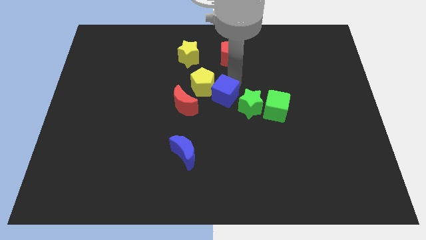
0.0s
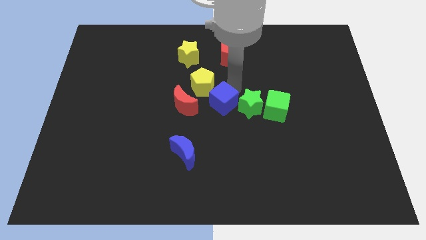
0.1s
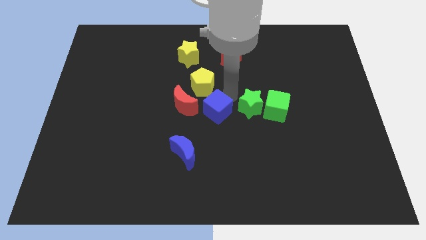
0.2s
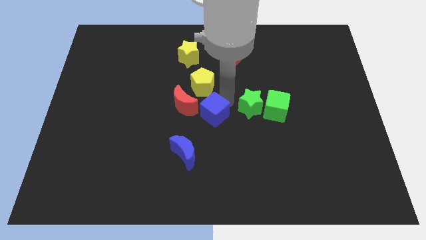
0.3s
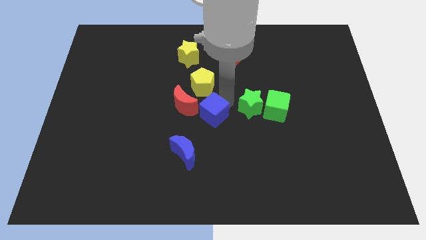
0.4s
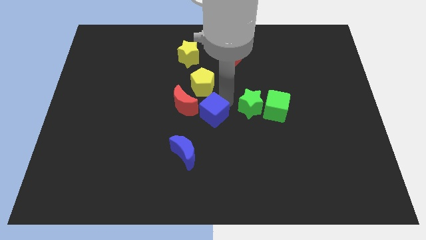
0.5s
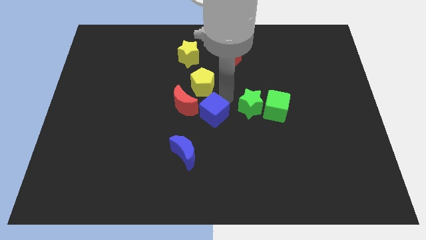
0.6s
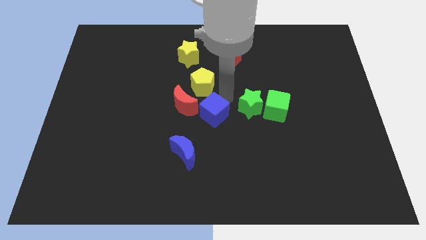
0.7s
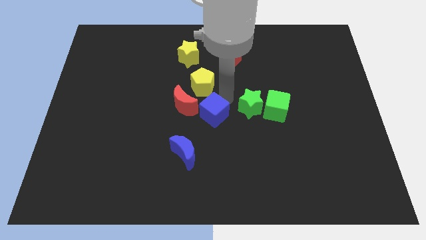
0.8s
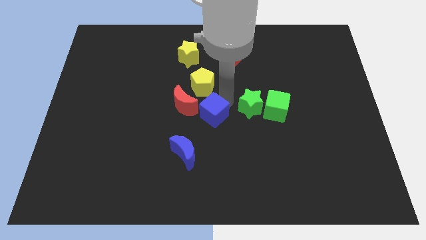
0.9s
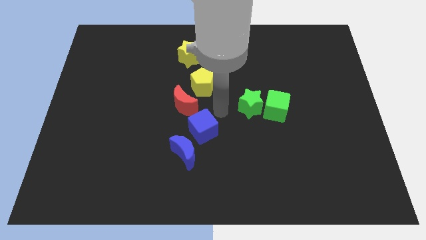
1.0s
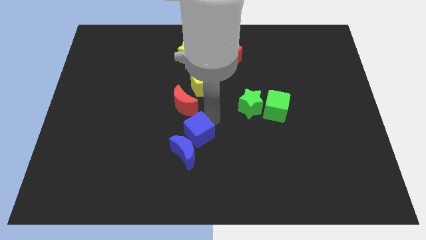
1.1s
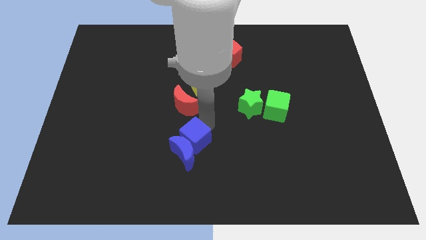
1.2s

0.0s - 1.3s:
push the blue cube towards the blue moon

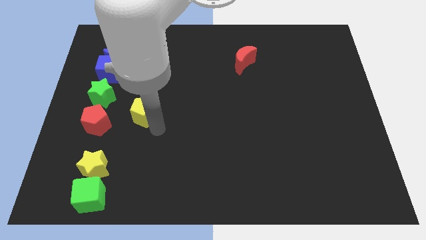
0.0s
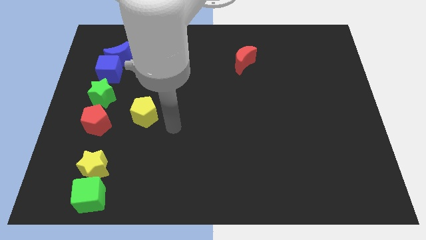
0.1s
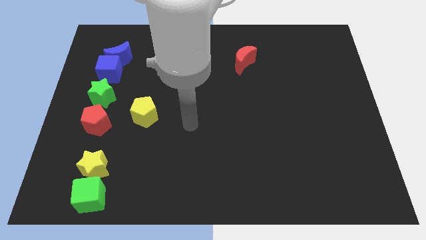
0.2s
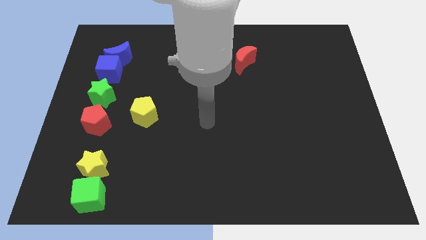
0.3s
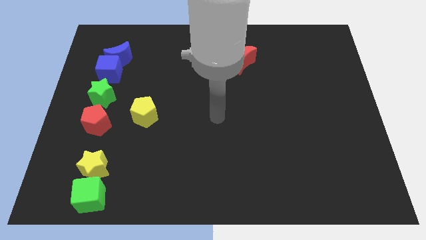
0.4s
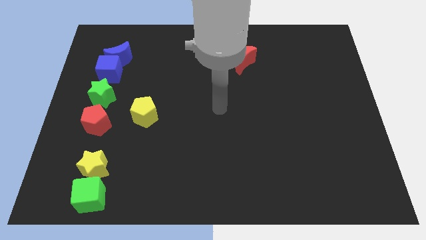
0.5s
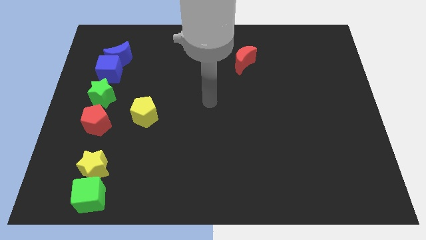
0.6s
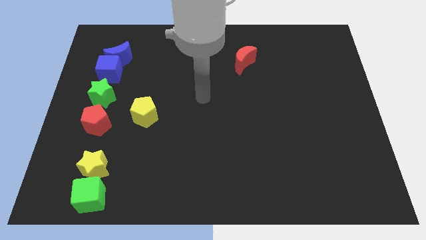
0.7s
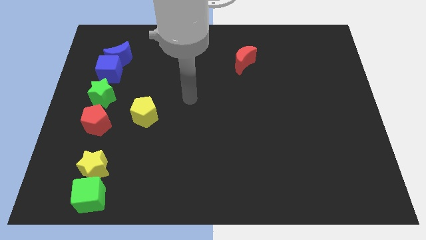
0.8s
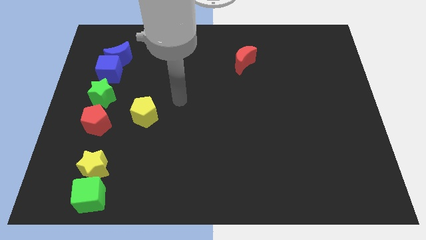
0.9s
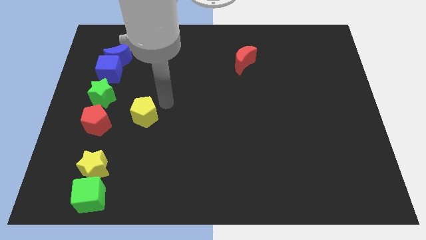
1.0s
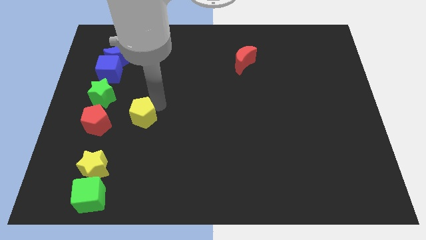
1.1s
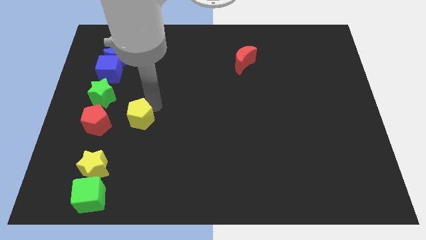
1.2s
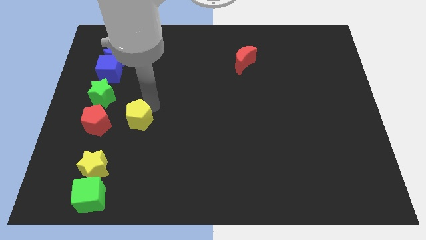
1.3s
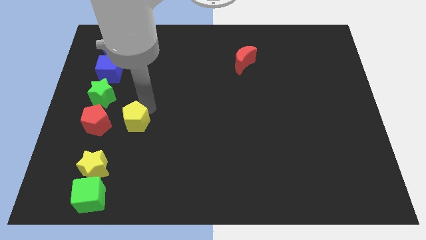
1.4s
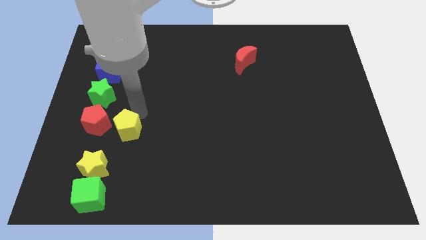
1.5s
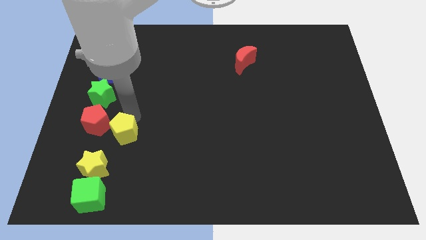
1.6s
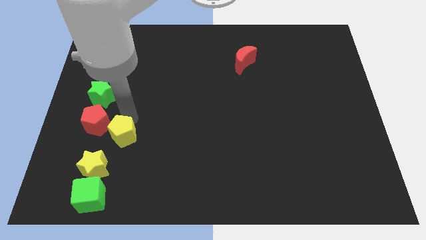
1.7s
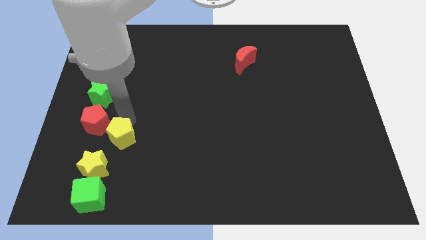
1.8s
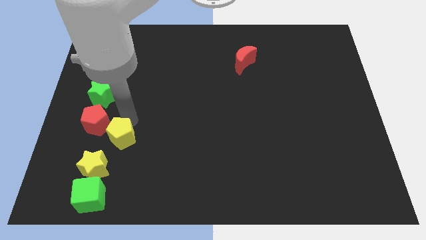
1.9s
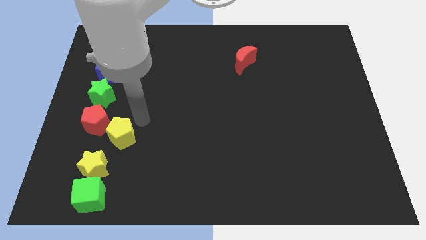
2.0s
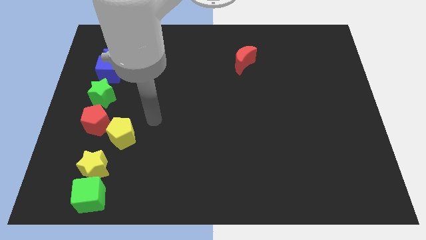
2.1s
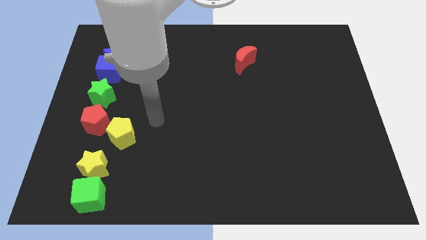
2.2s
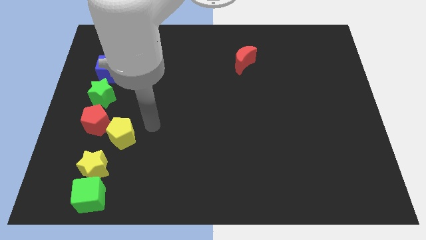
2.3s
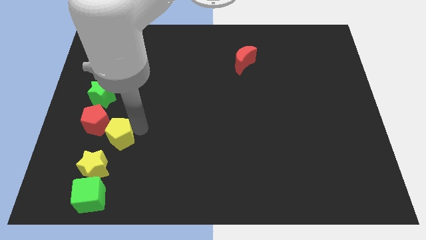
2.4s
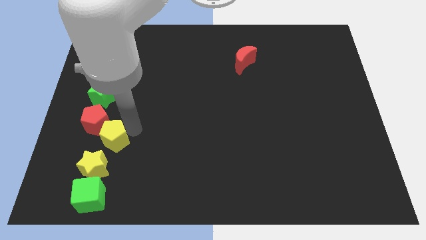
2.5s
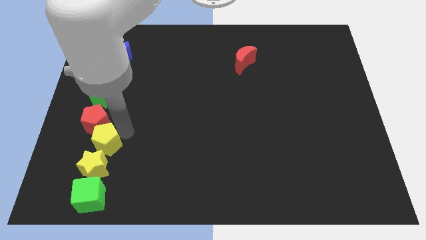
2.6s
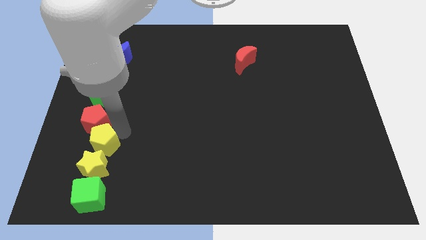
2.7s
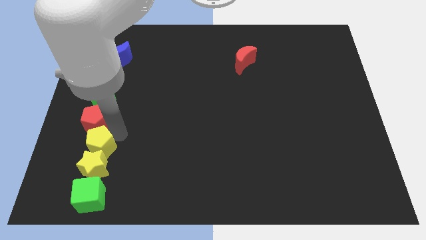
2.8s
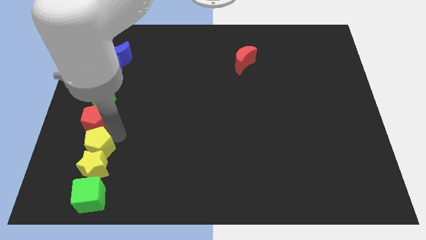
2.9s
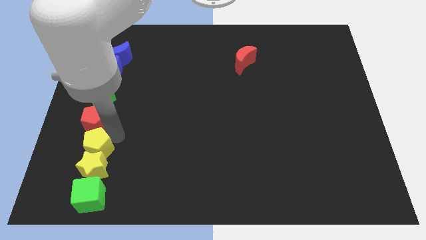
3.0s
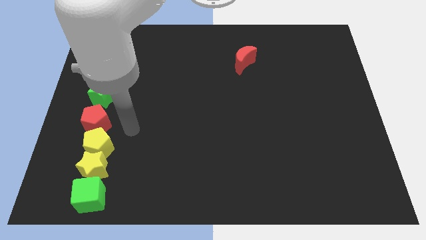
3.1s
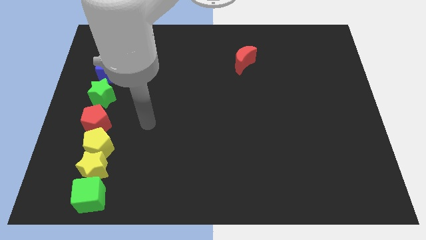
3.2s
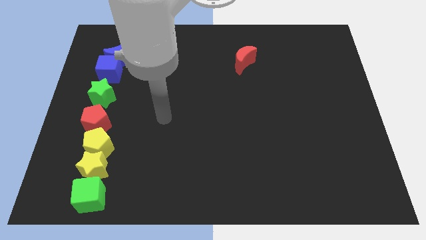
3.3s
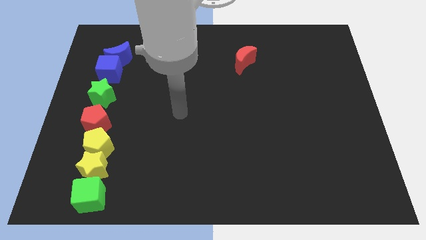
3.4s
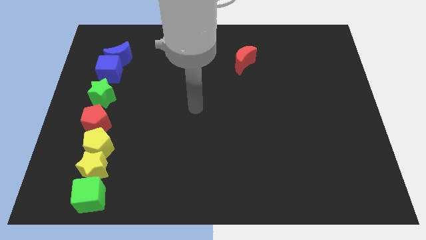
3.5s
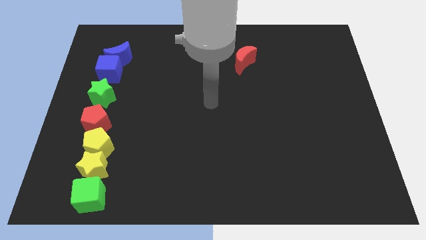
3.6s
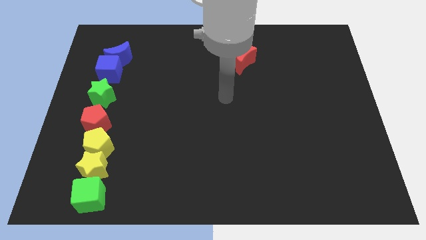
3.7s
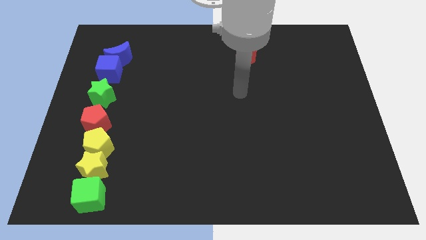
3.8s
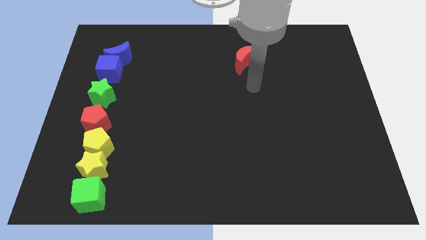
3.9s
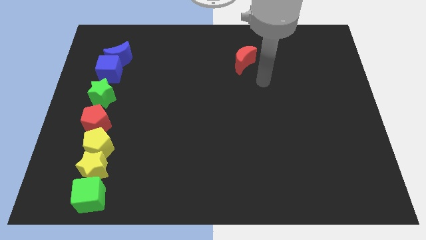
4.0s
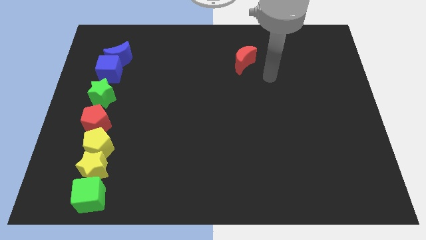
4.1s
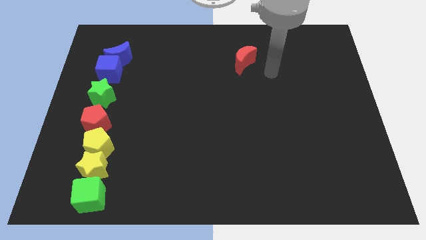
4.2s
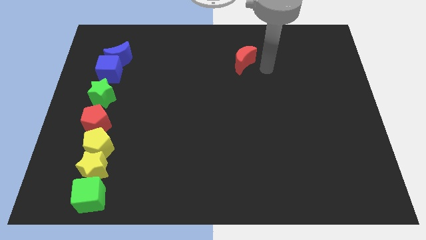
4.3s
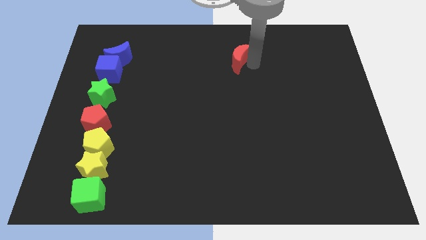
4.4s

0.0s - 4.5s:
move the yellow pentagon to the top of the yellow star

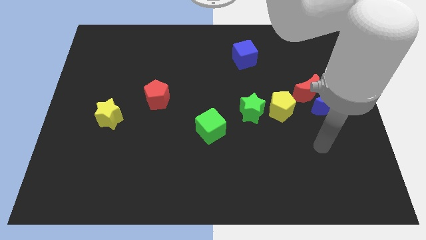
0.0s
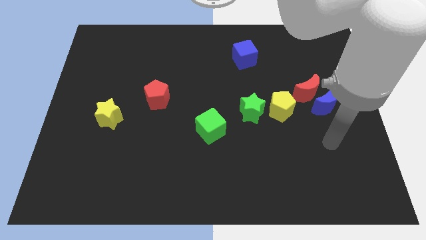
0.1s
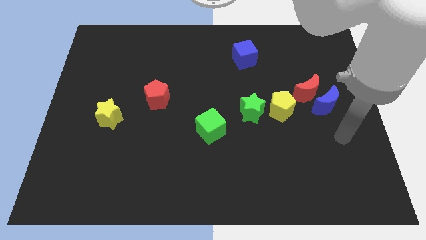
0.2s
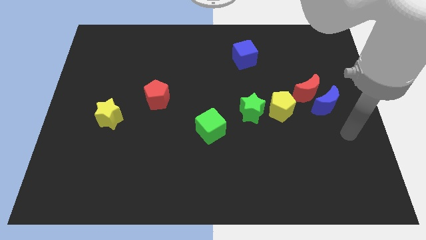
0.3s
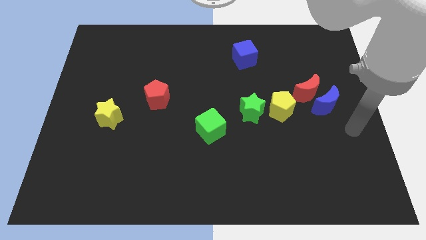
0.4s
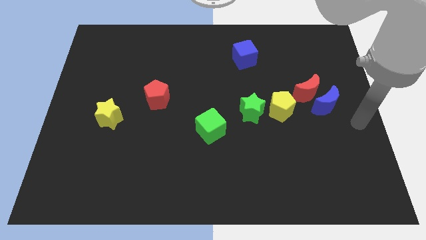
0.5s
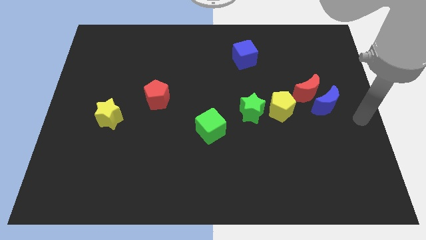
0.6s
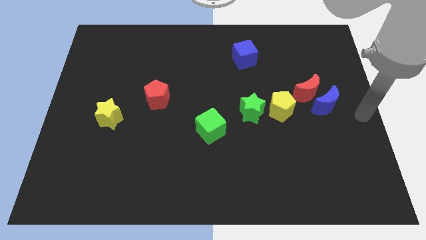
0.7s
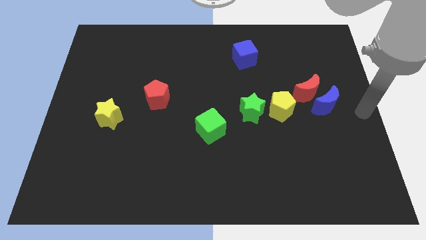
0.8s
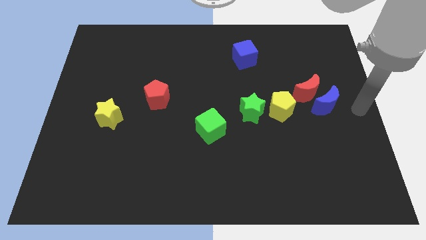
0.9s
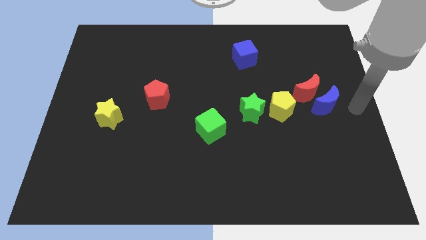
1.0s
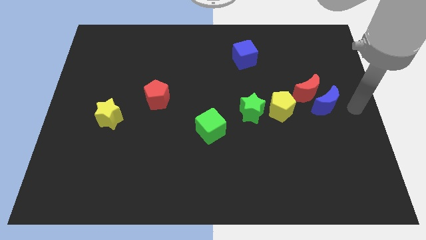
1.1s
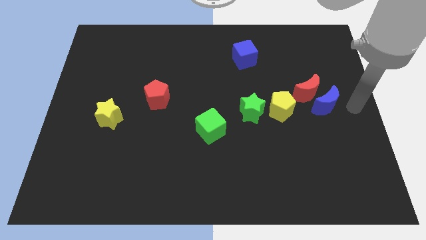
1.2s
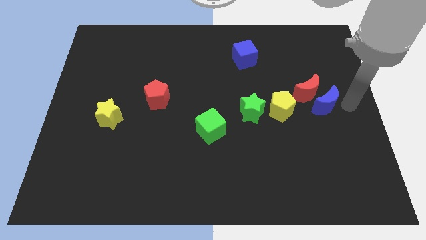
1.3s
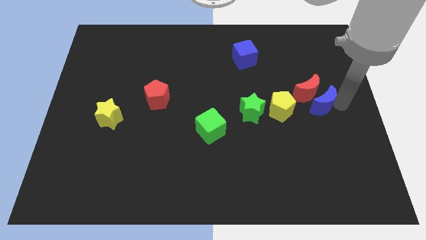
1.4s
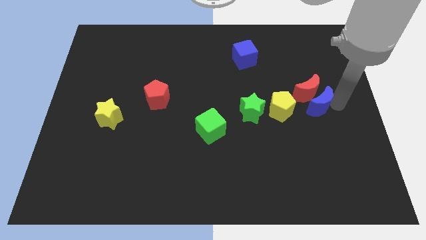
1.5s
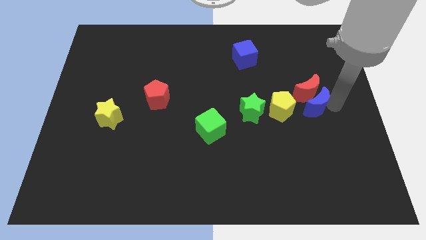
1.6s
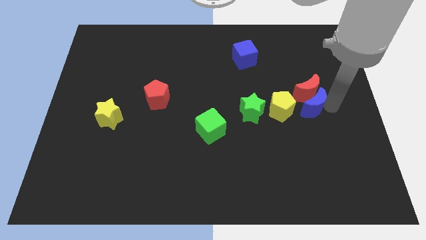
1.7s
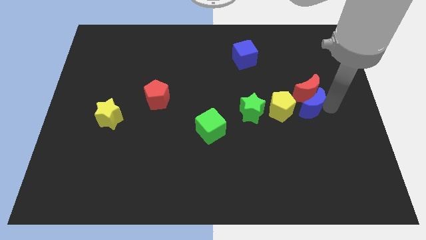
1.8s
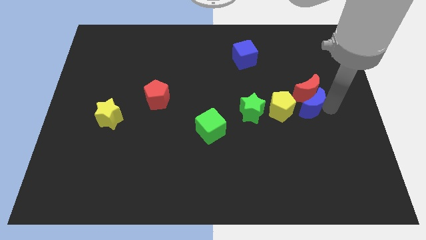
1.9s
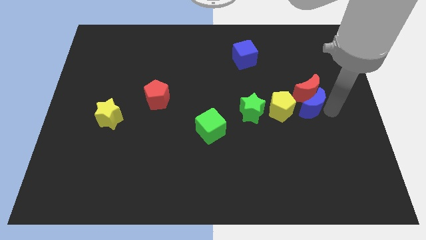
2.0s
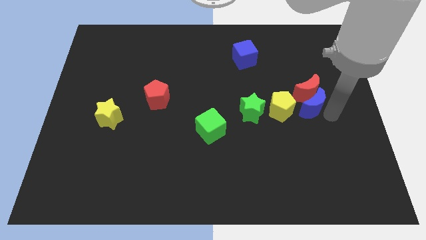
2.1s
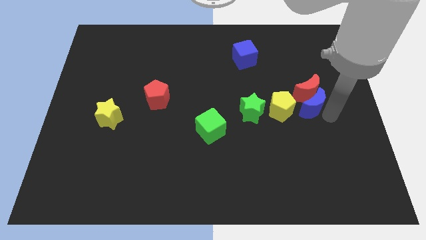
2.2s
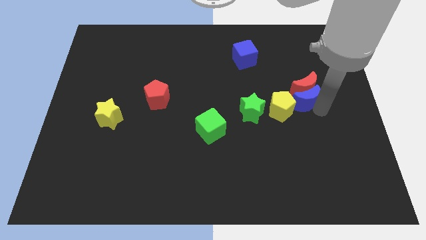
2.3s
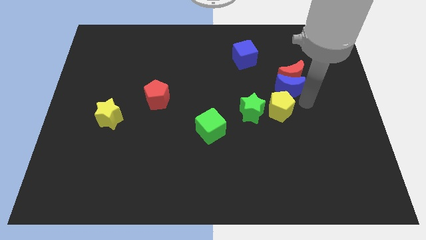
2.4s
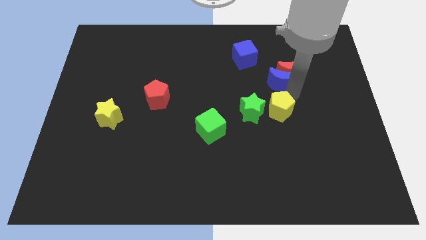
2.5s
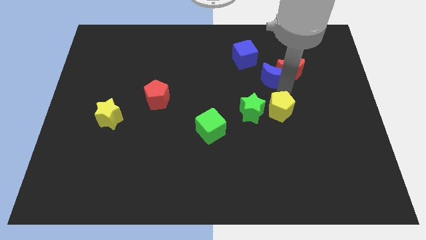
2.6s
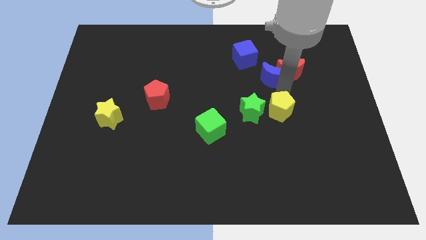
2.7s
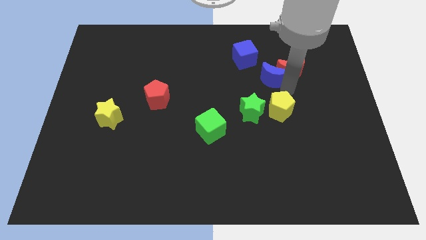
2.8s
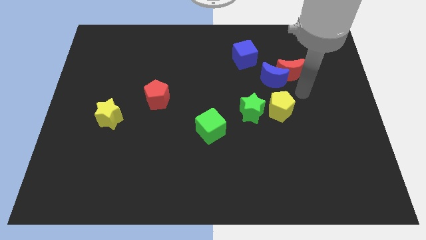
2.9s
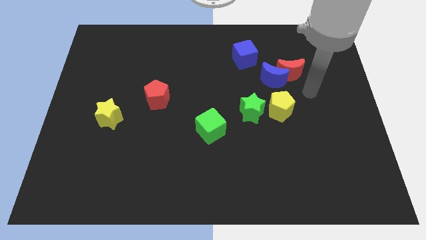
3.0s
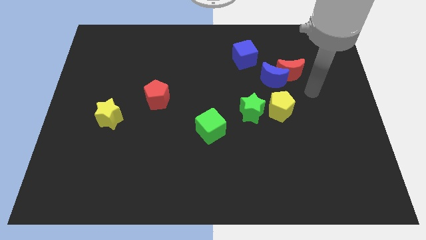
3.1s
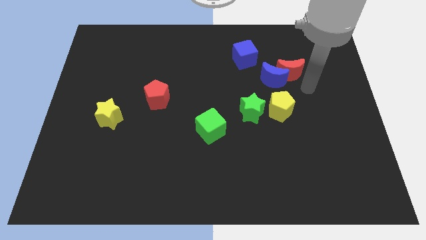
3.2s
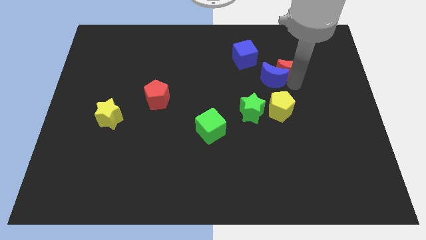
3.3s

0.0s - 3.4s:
push the red moon and blue moon towards the blue cube
